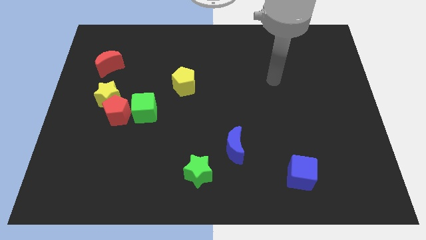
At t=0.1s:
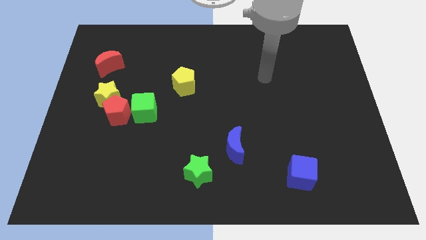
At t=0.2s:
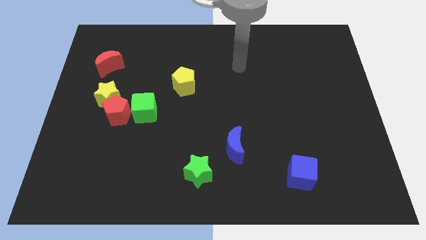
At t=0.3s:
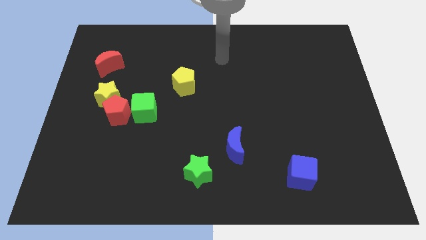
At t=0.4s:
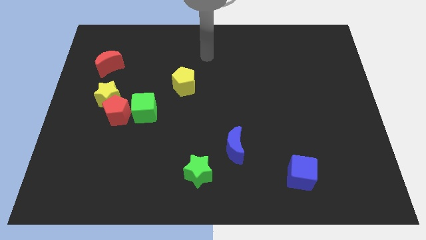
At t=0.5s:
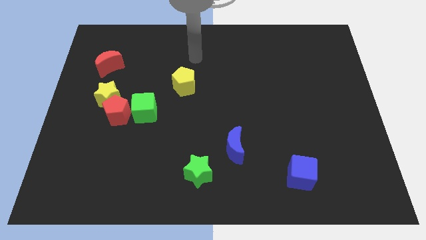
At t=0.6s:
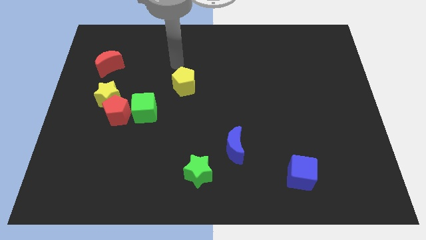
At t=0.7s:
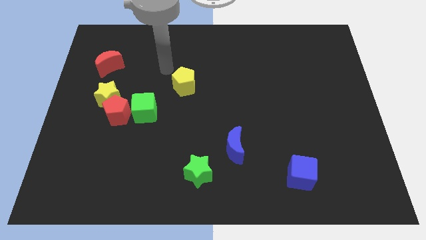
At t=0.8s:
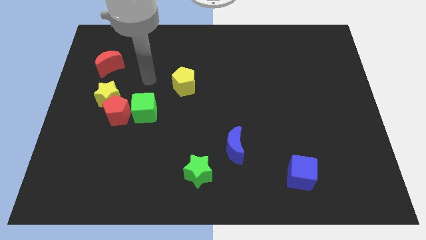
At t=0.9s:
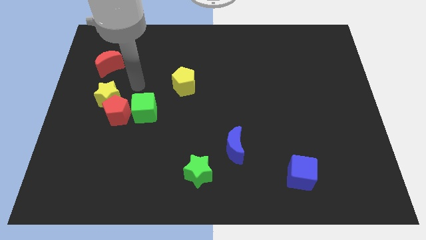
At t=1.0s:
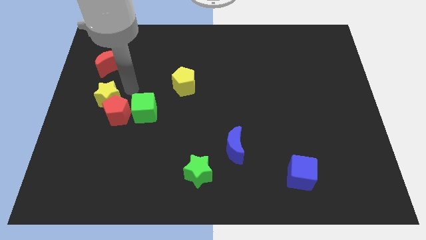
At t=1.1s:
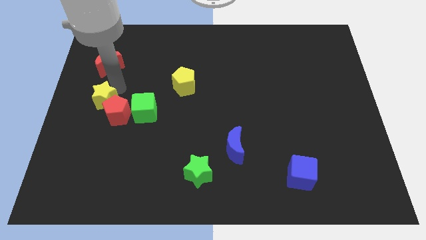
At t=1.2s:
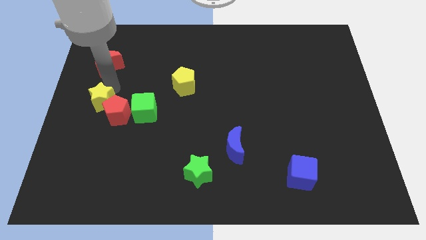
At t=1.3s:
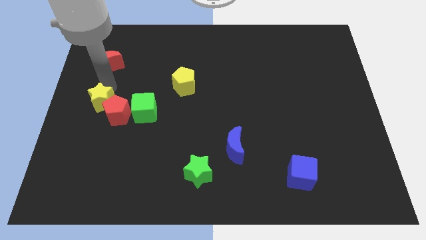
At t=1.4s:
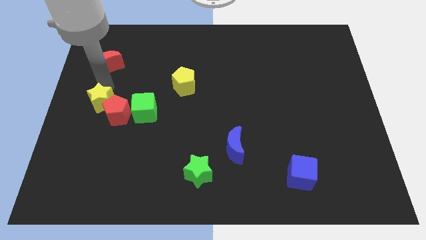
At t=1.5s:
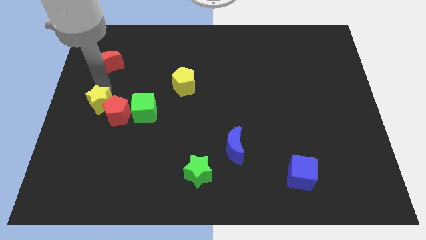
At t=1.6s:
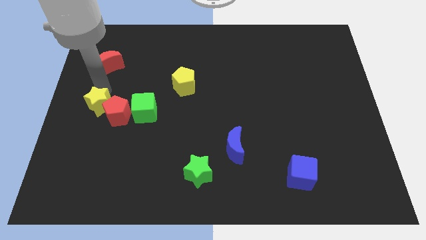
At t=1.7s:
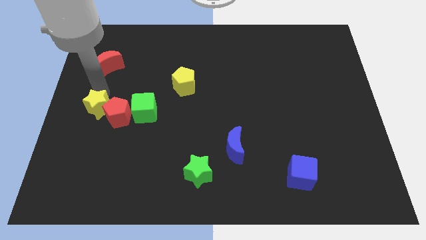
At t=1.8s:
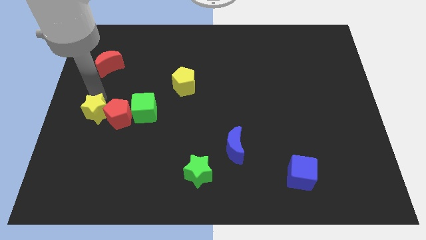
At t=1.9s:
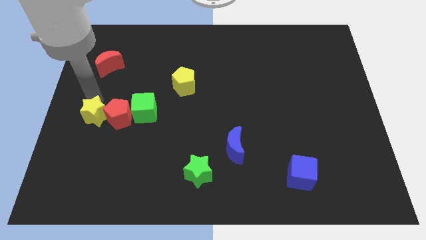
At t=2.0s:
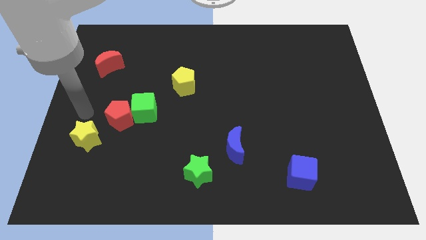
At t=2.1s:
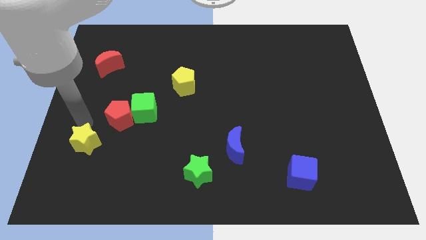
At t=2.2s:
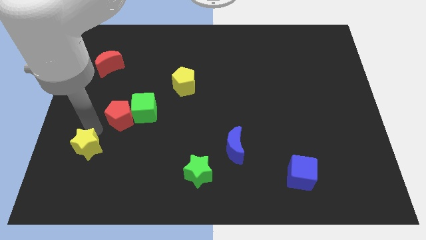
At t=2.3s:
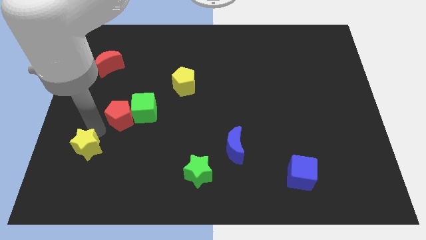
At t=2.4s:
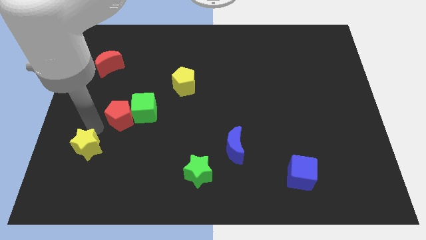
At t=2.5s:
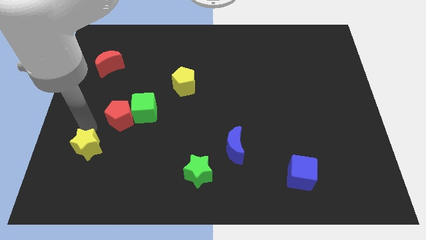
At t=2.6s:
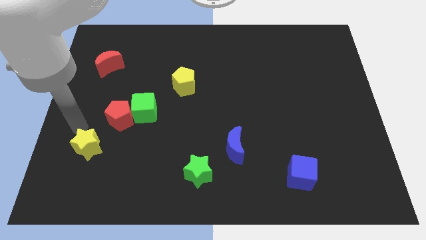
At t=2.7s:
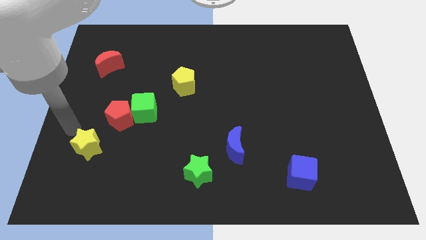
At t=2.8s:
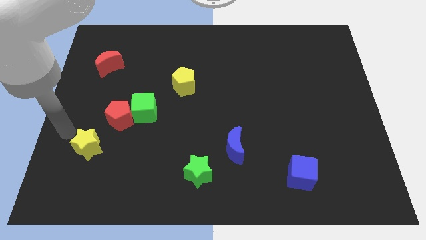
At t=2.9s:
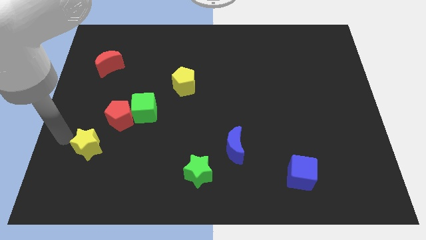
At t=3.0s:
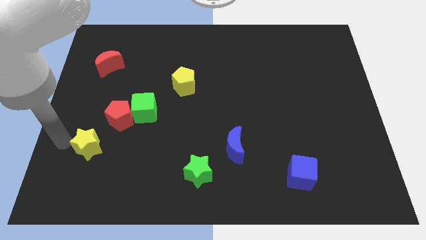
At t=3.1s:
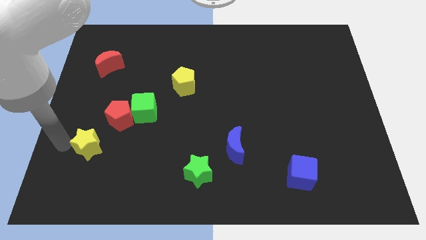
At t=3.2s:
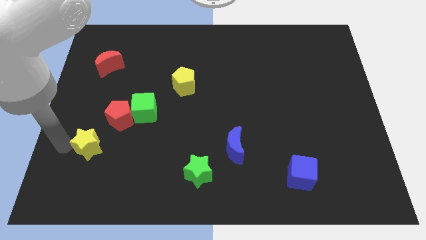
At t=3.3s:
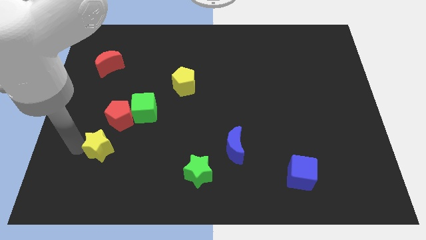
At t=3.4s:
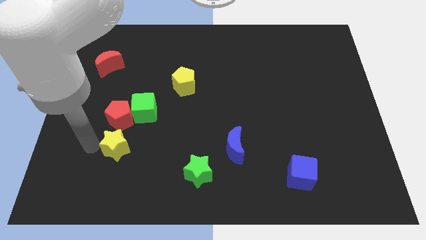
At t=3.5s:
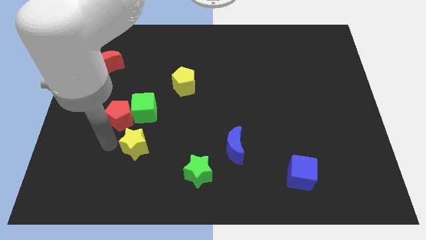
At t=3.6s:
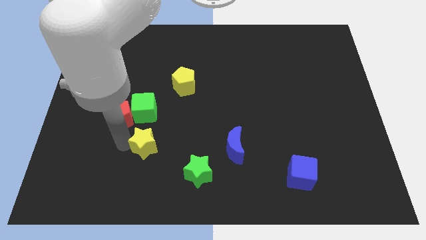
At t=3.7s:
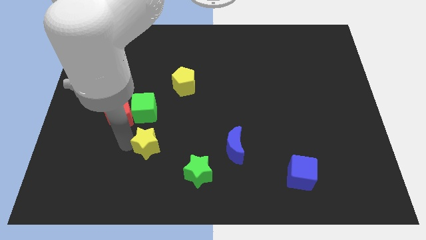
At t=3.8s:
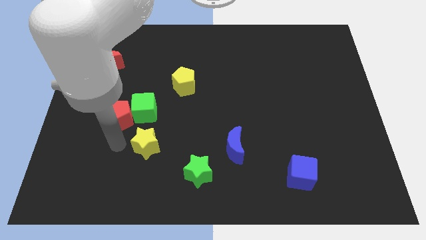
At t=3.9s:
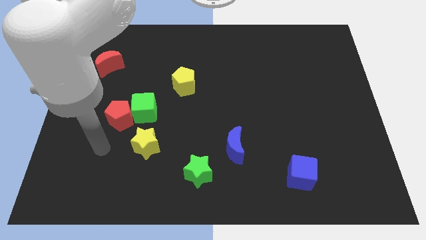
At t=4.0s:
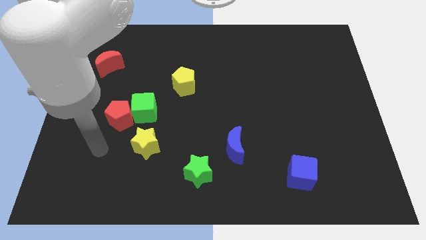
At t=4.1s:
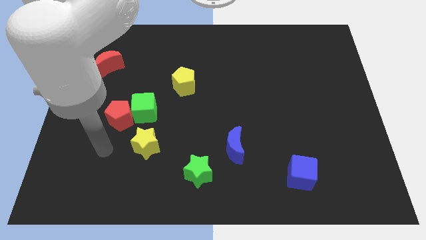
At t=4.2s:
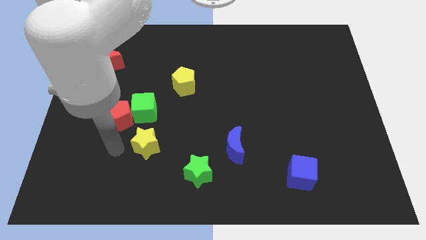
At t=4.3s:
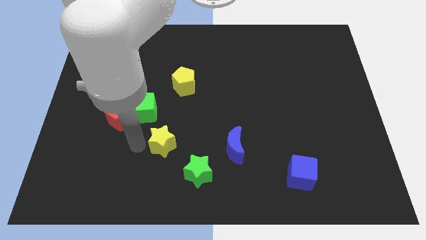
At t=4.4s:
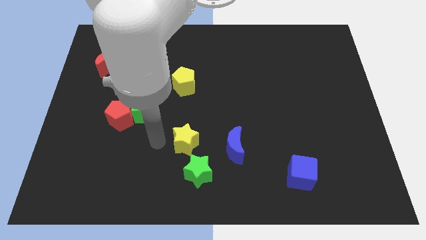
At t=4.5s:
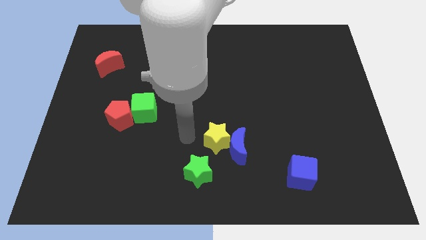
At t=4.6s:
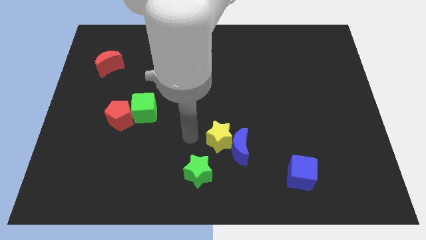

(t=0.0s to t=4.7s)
move the yellow star towards the blue moon

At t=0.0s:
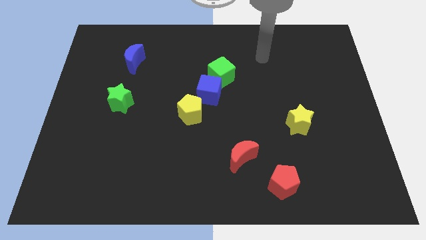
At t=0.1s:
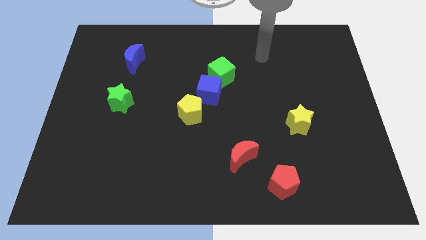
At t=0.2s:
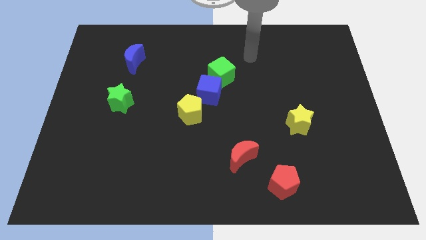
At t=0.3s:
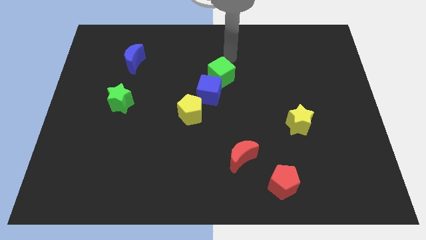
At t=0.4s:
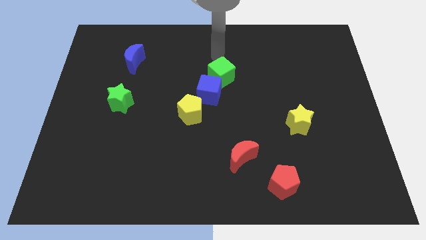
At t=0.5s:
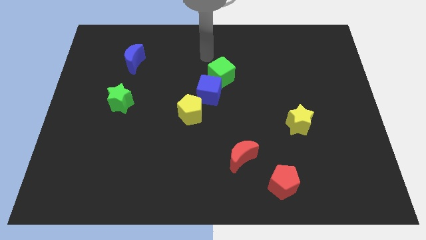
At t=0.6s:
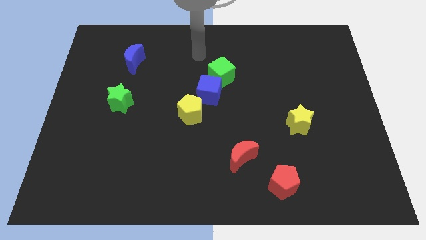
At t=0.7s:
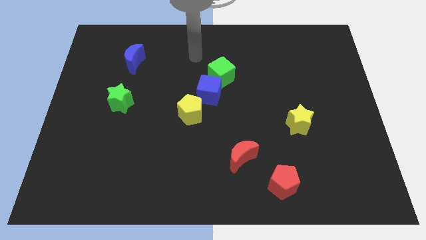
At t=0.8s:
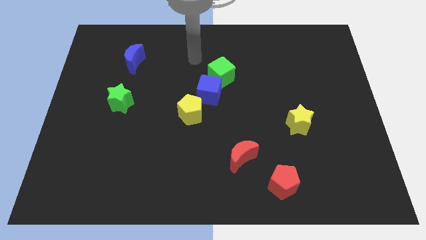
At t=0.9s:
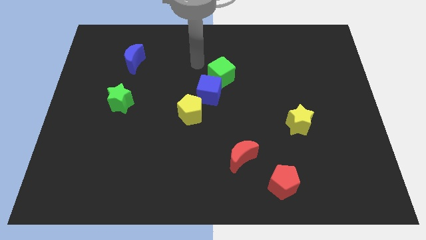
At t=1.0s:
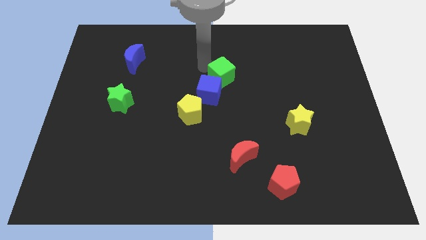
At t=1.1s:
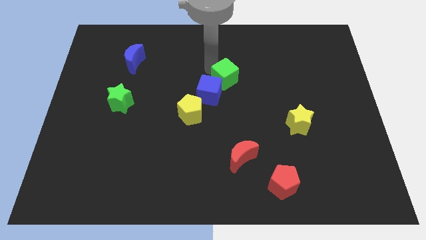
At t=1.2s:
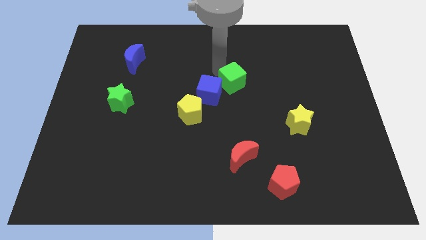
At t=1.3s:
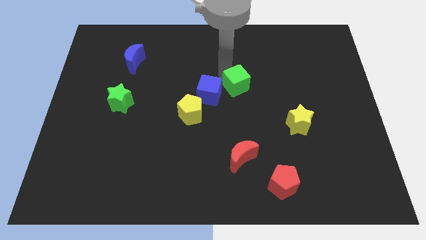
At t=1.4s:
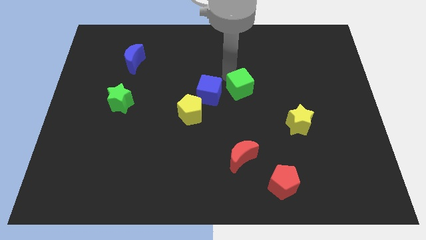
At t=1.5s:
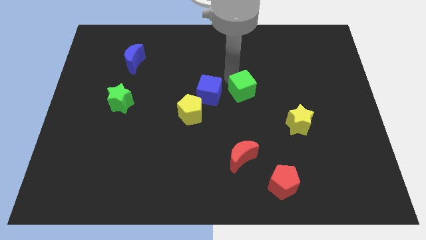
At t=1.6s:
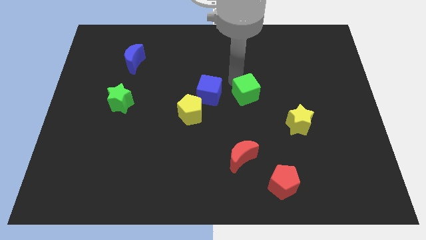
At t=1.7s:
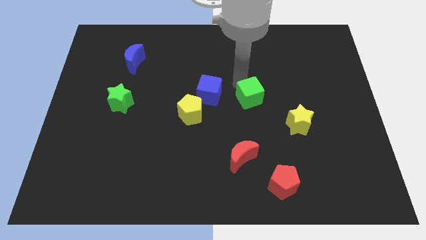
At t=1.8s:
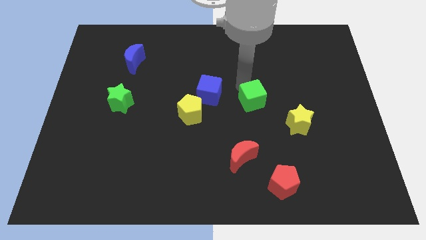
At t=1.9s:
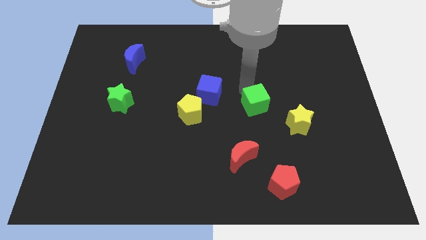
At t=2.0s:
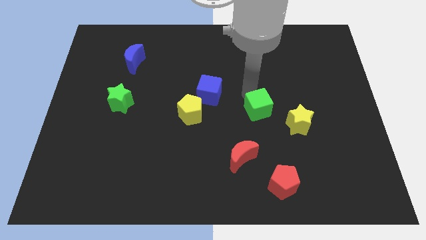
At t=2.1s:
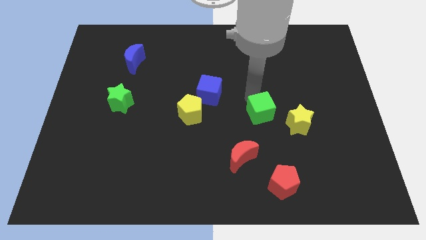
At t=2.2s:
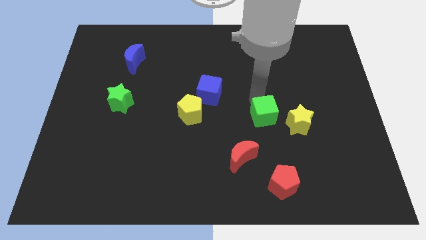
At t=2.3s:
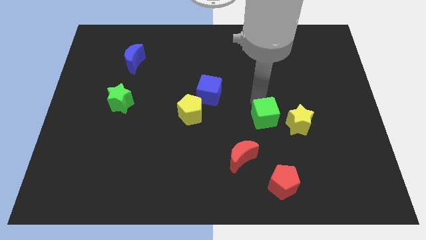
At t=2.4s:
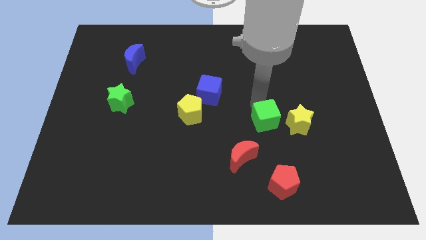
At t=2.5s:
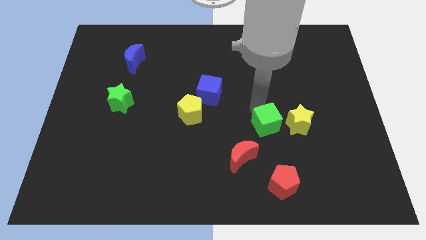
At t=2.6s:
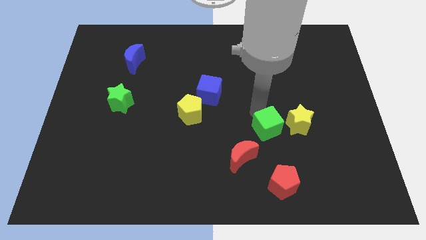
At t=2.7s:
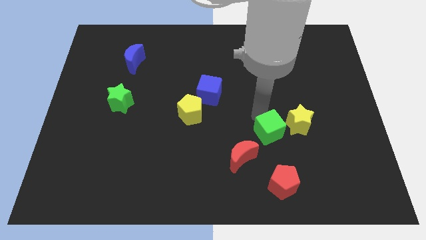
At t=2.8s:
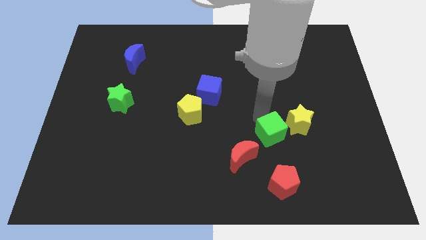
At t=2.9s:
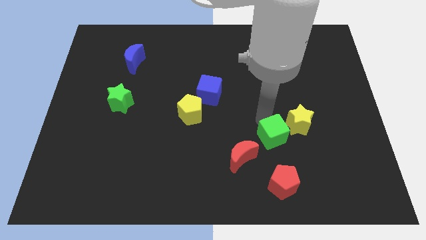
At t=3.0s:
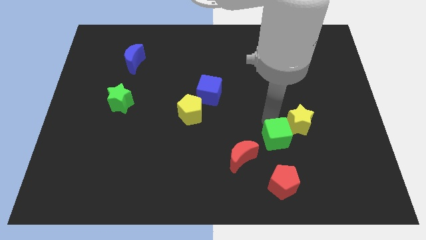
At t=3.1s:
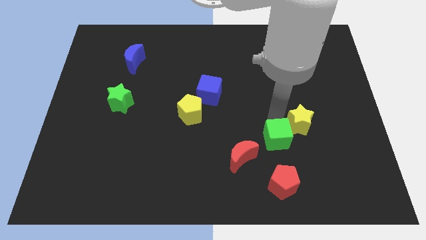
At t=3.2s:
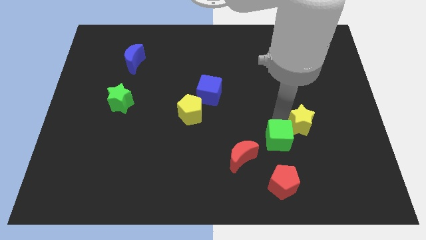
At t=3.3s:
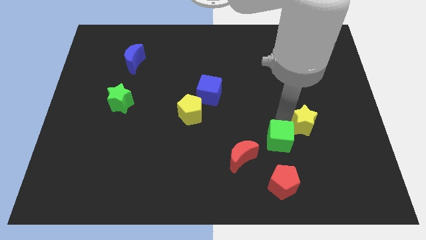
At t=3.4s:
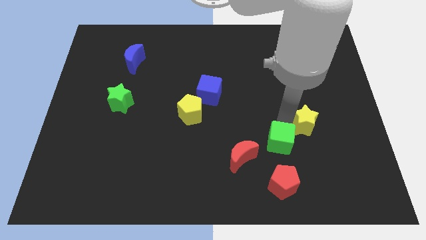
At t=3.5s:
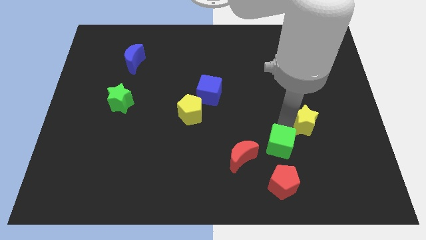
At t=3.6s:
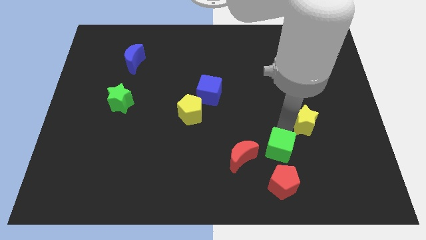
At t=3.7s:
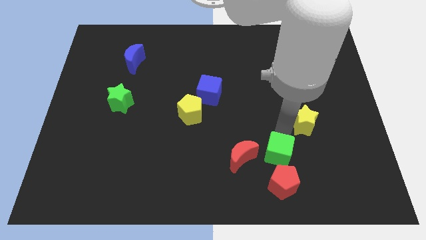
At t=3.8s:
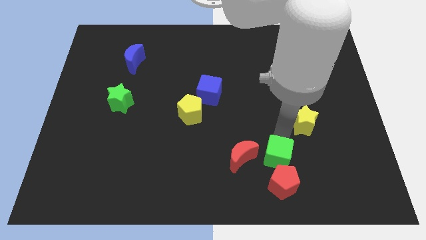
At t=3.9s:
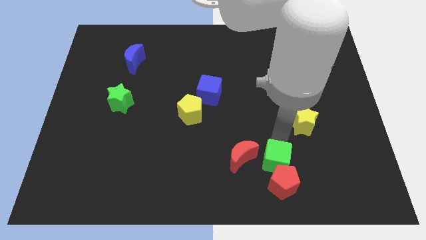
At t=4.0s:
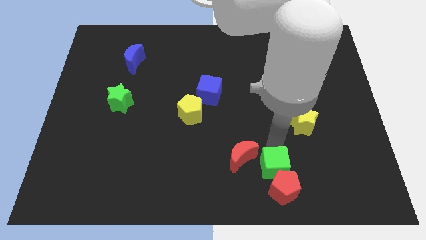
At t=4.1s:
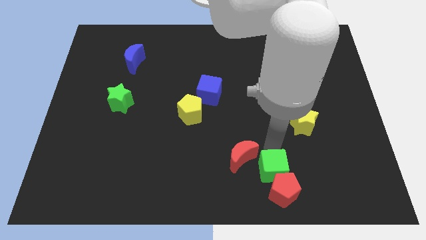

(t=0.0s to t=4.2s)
put the green cube towards the red pentagon
